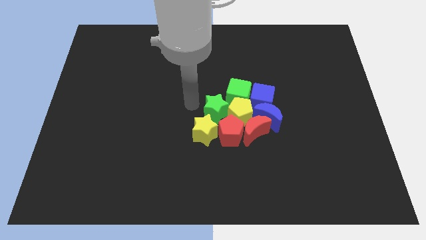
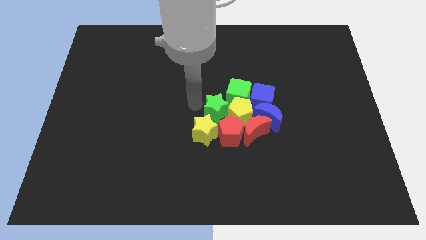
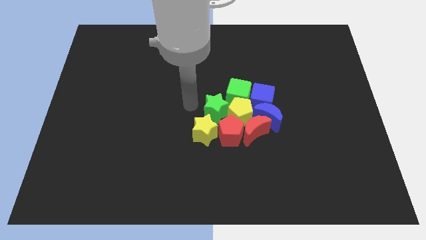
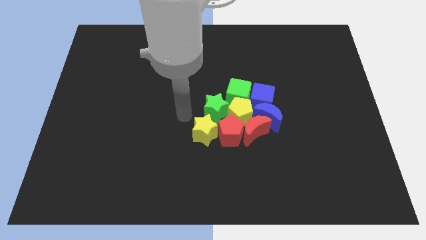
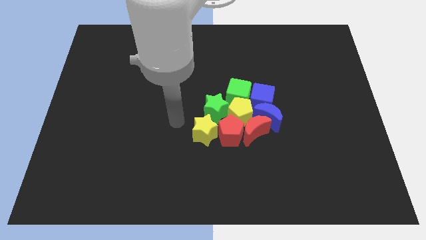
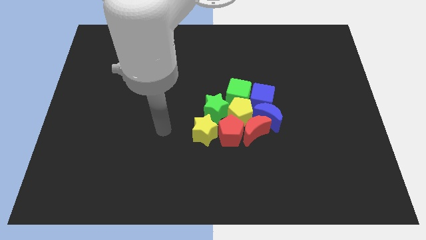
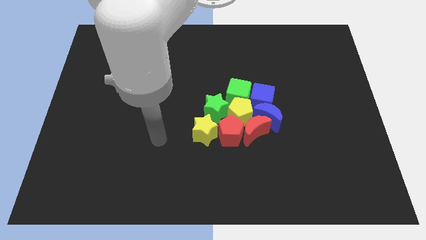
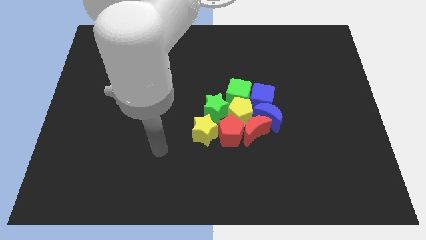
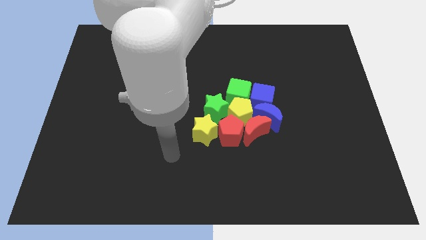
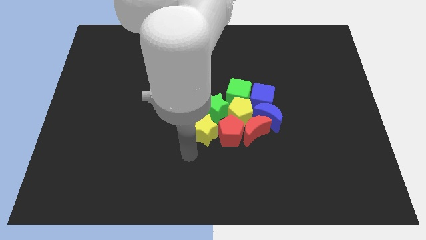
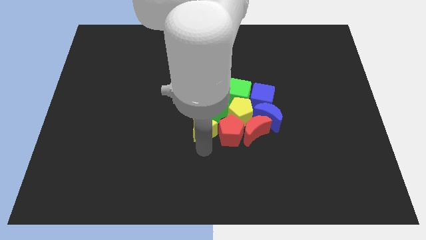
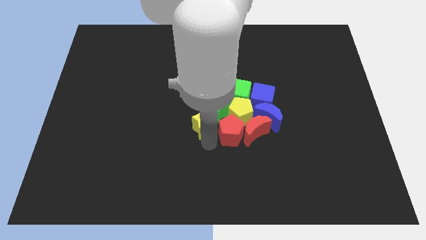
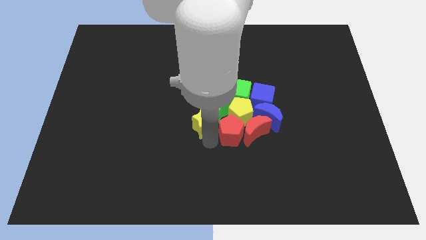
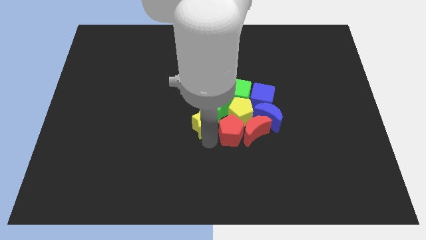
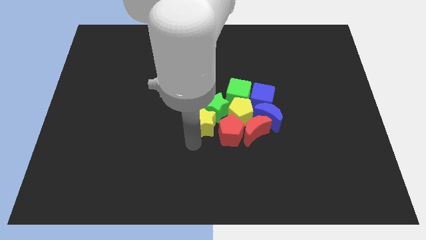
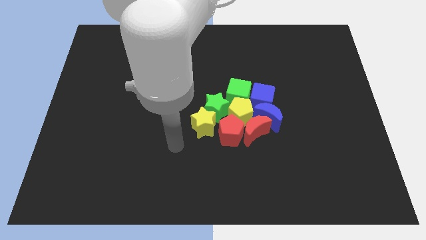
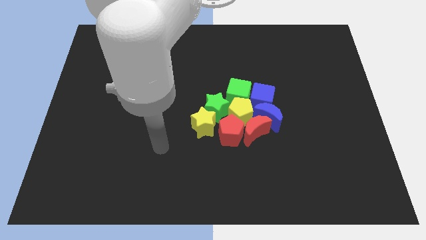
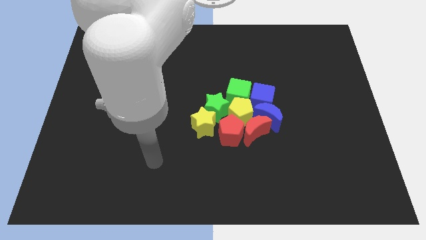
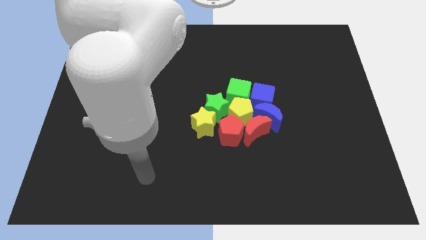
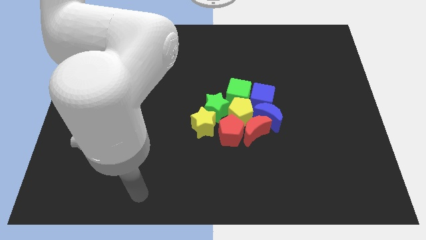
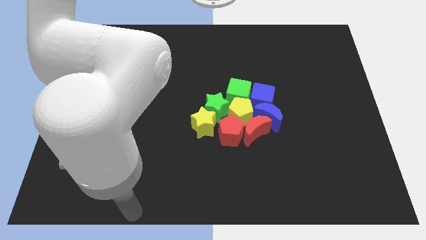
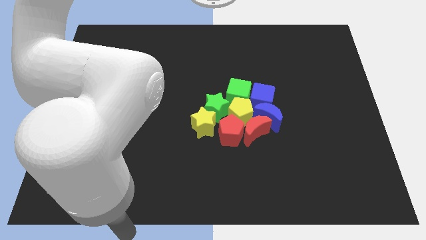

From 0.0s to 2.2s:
adjust the yellow star slightly at the center

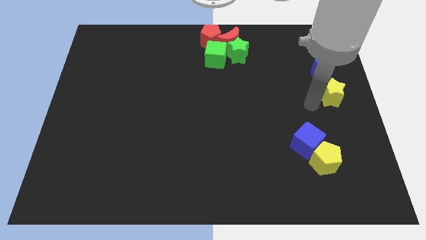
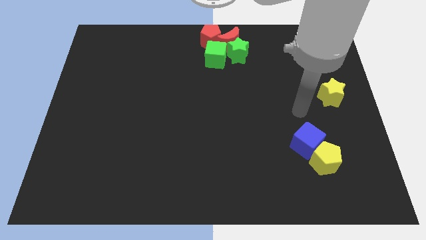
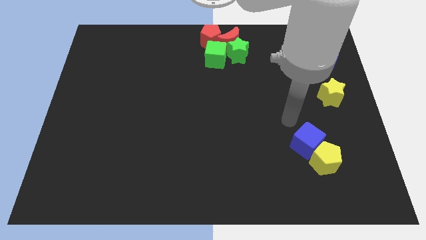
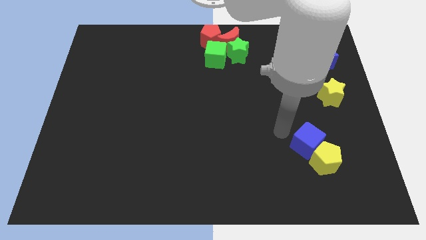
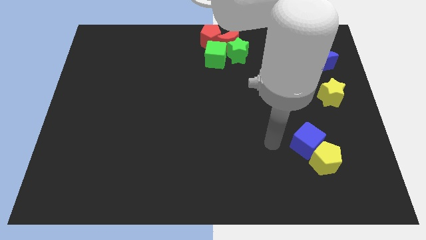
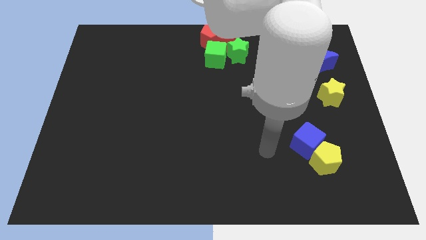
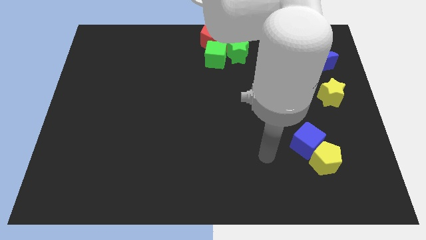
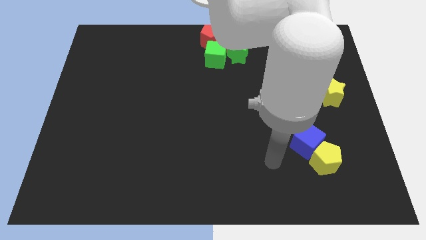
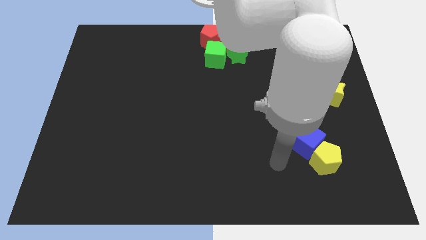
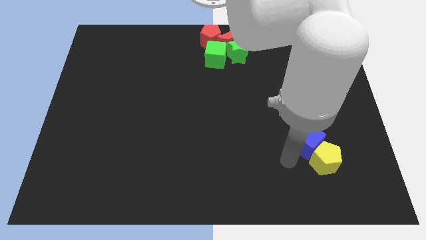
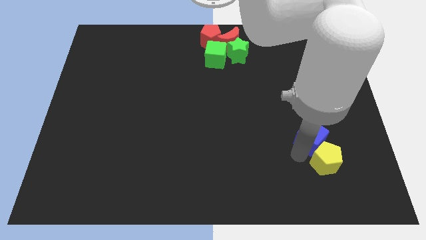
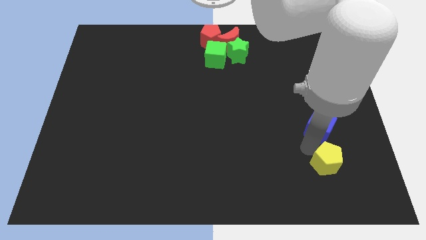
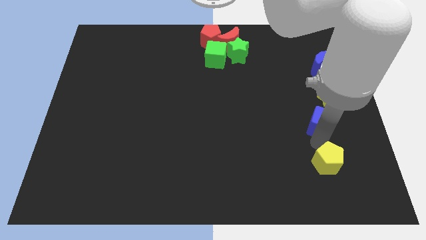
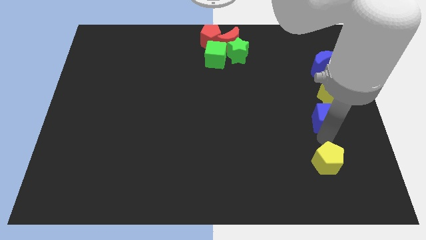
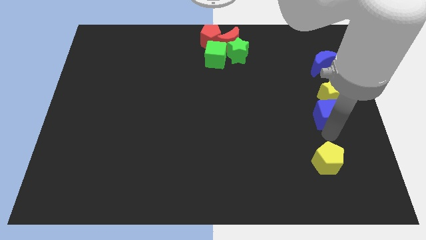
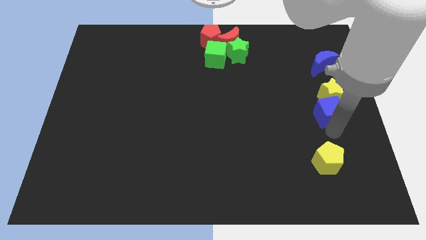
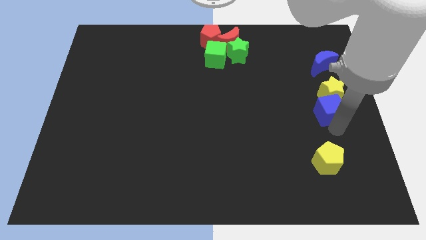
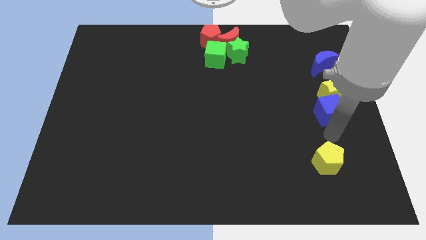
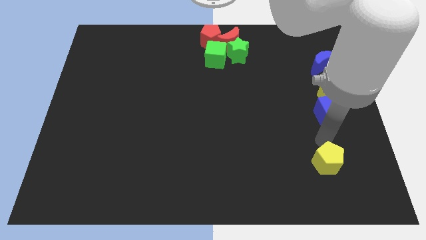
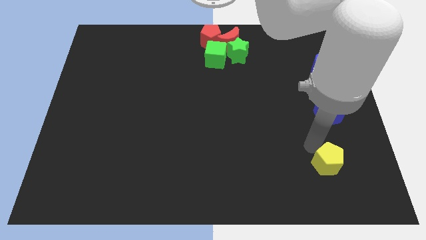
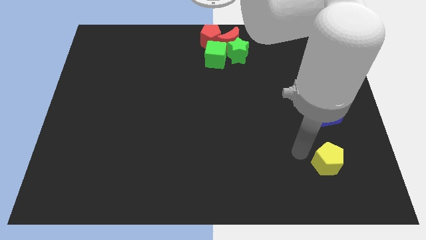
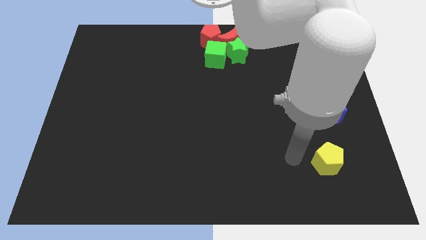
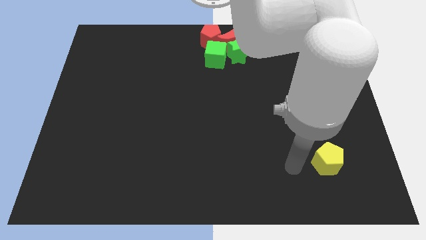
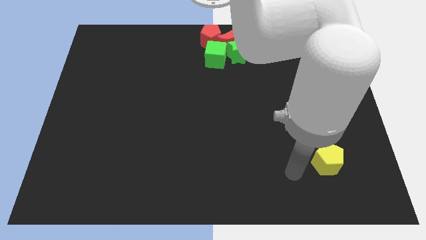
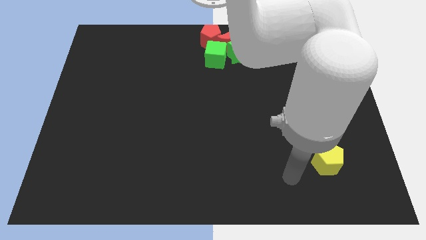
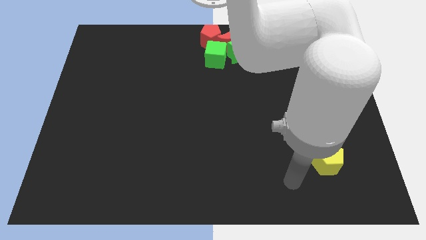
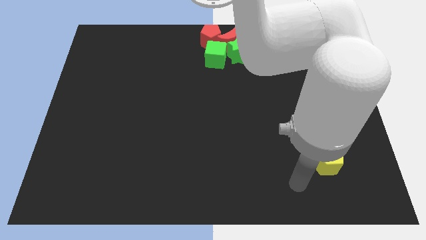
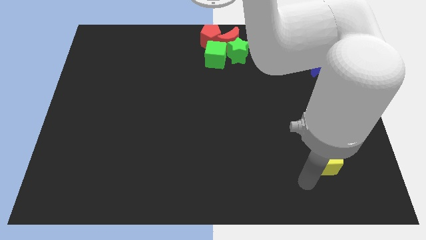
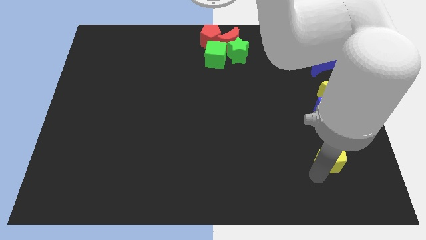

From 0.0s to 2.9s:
move blue cube into the yellow star

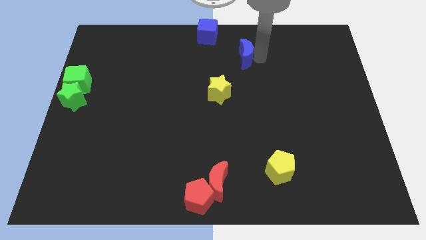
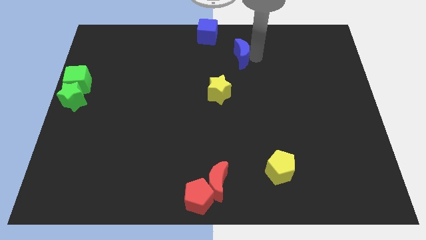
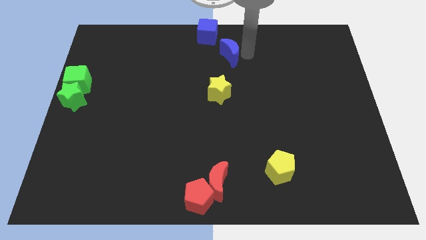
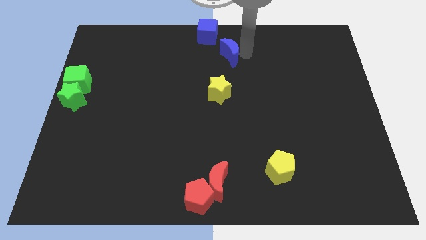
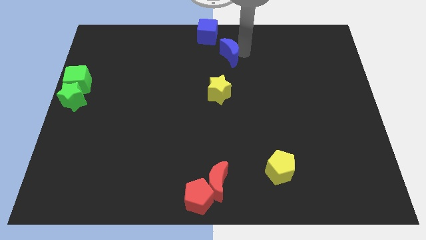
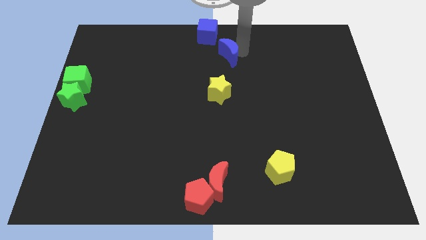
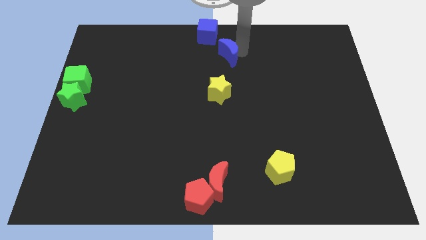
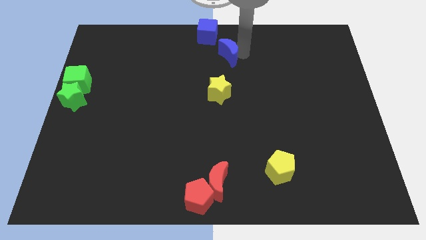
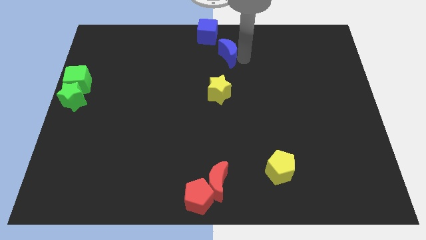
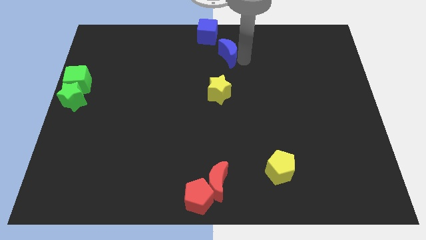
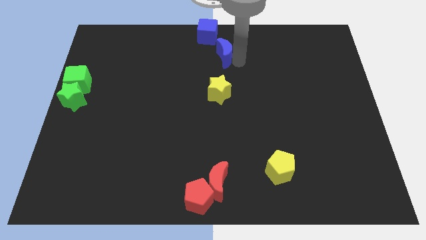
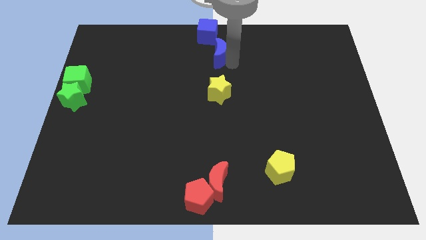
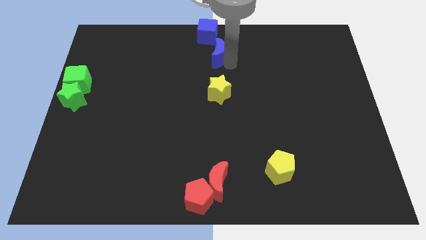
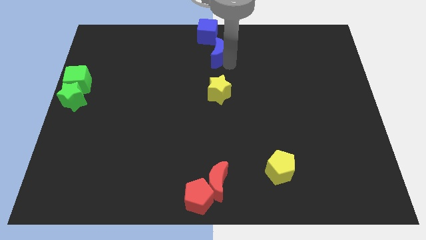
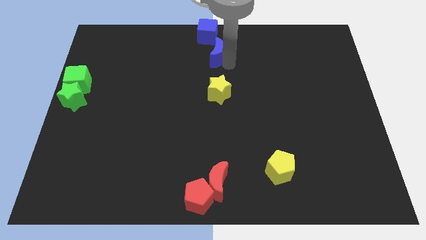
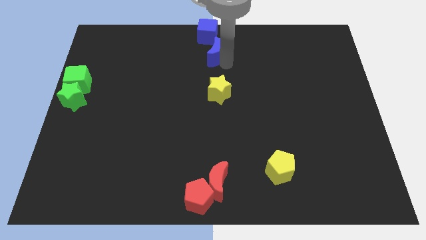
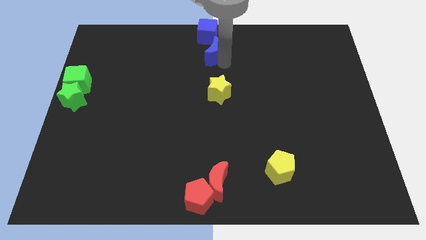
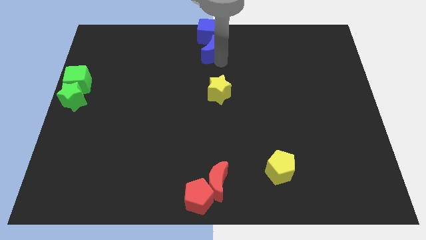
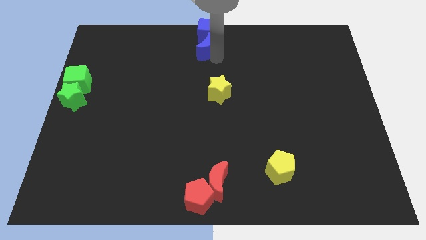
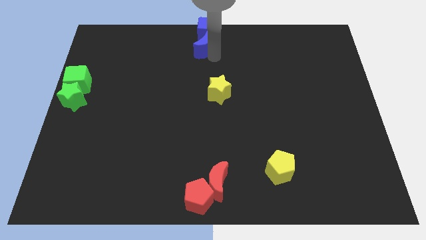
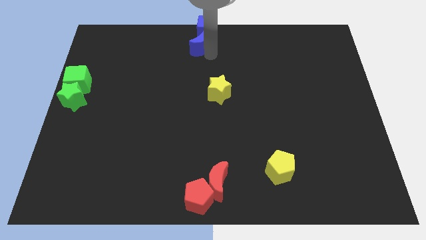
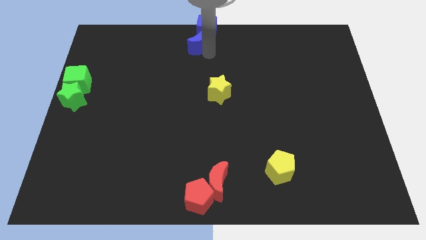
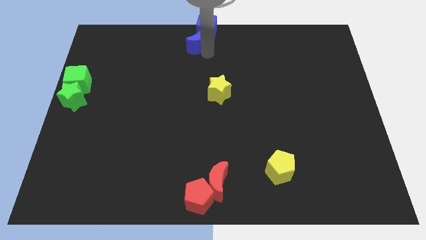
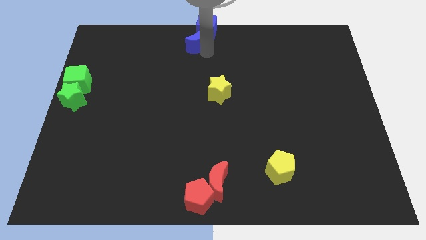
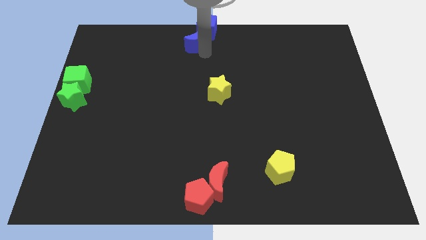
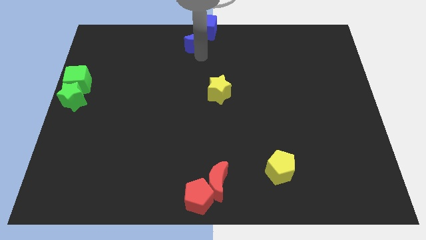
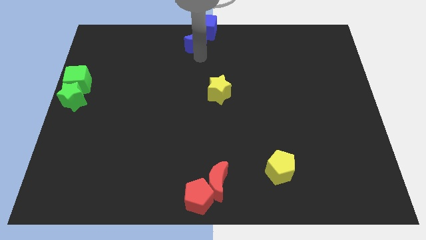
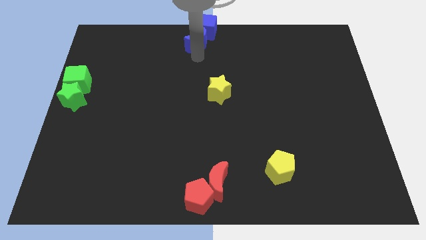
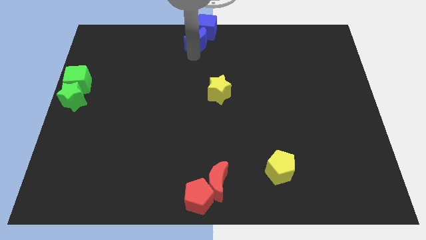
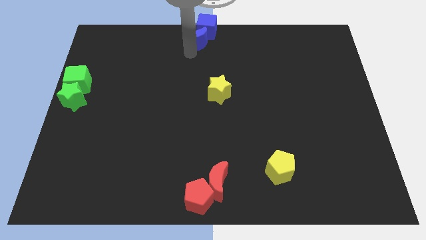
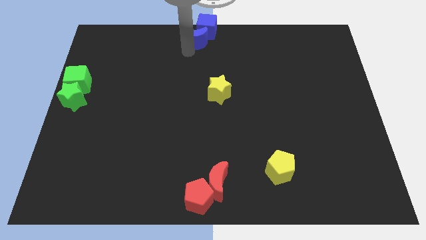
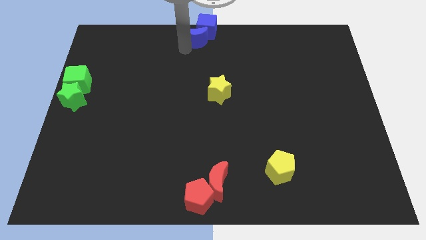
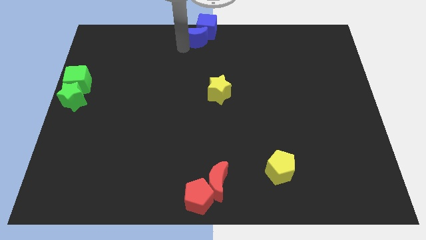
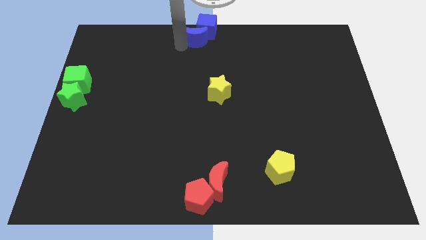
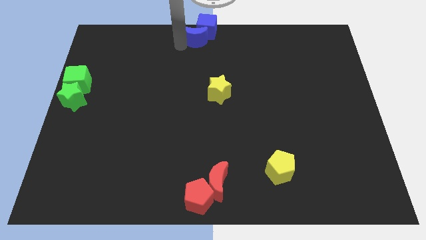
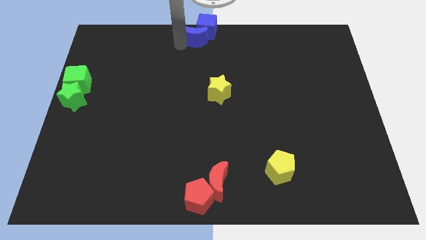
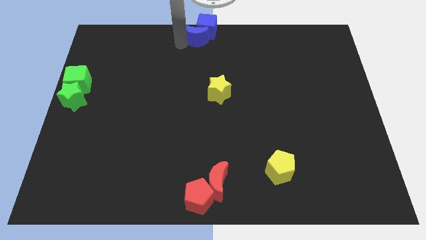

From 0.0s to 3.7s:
push the blue moon into the blue cube
